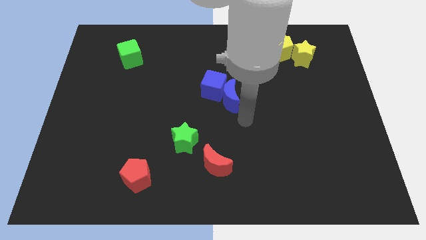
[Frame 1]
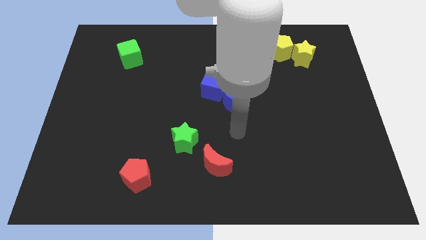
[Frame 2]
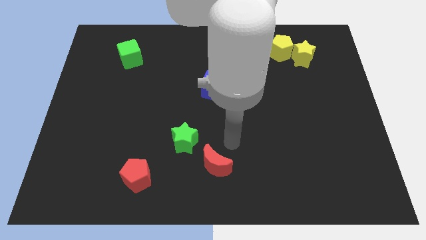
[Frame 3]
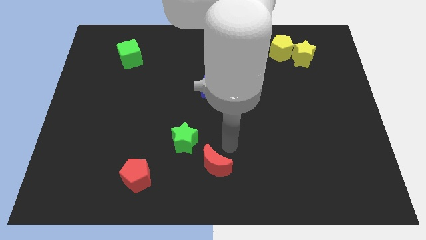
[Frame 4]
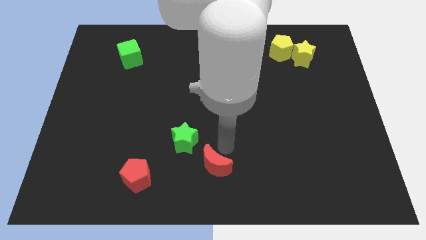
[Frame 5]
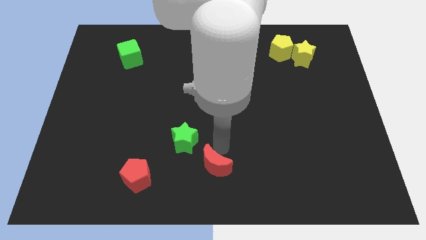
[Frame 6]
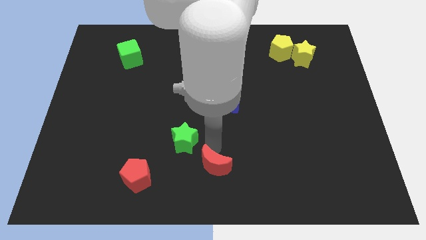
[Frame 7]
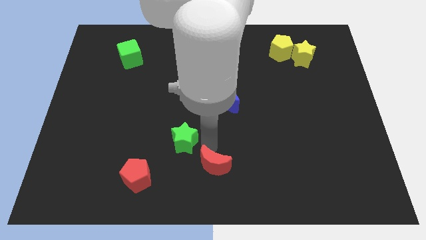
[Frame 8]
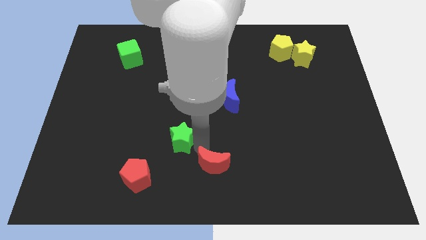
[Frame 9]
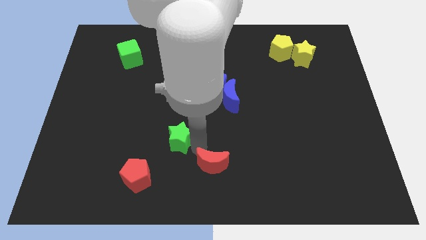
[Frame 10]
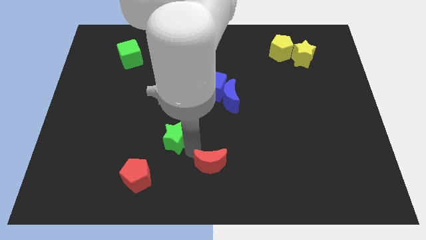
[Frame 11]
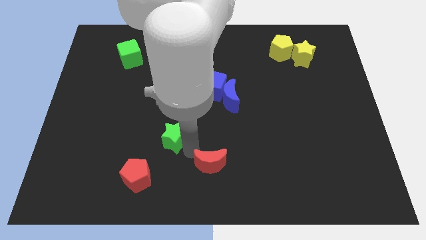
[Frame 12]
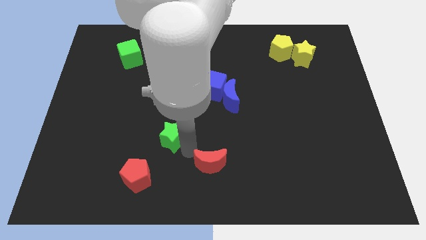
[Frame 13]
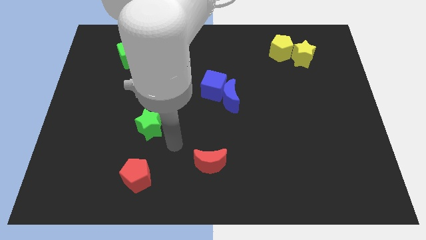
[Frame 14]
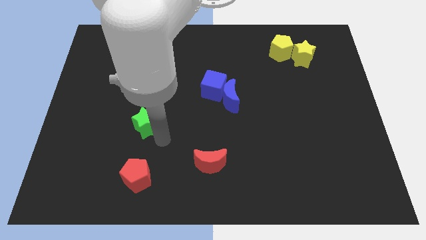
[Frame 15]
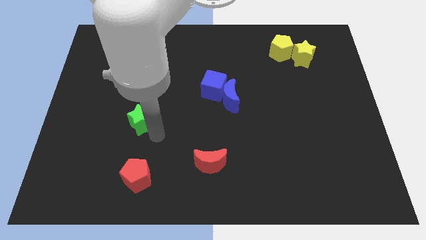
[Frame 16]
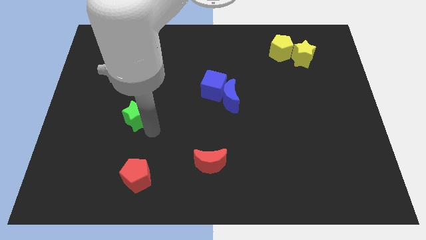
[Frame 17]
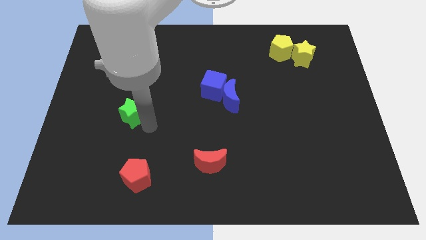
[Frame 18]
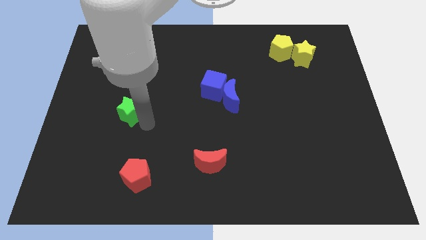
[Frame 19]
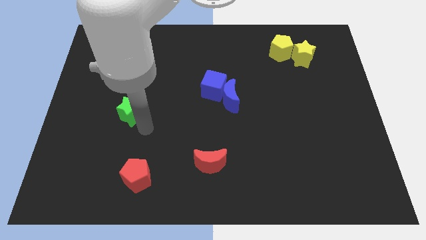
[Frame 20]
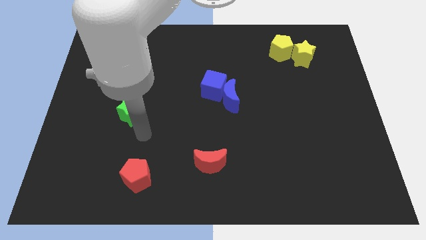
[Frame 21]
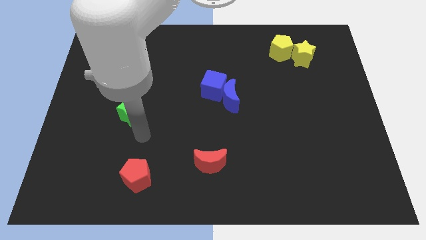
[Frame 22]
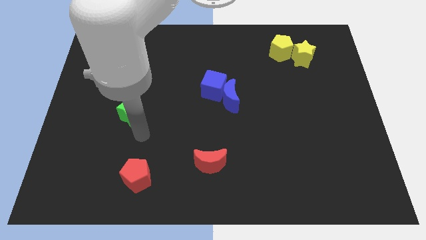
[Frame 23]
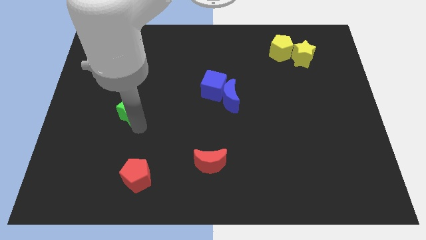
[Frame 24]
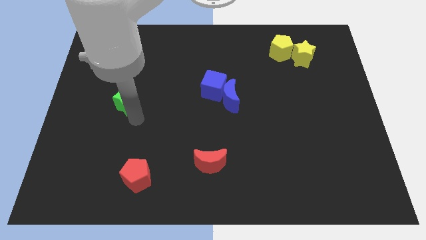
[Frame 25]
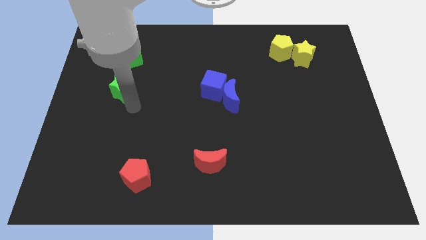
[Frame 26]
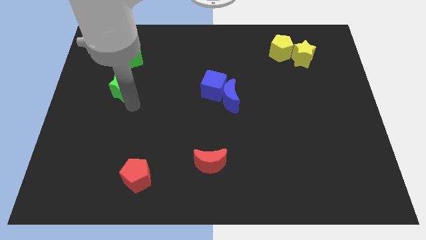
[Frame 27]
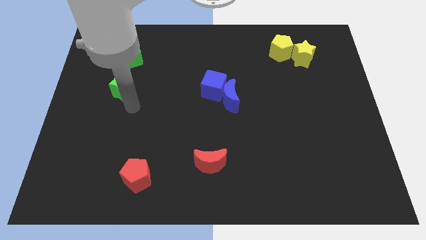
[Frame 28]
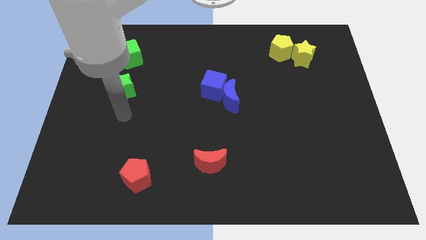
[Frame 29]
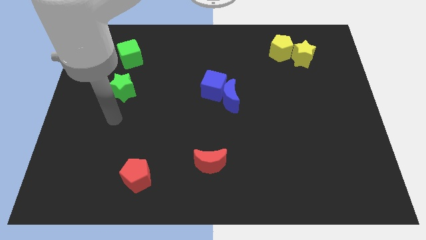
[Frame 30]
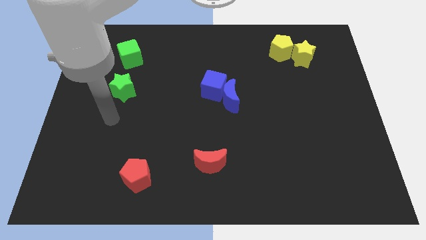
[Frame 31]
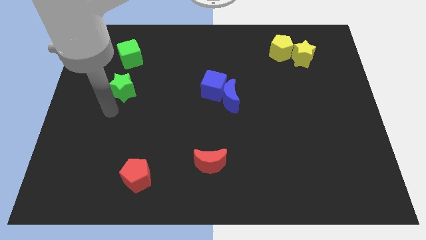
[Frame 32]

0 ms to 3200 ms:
put the green star bottom to the green cube

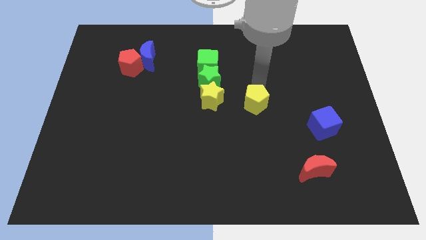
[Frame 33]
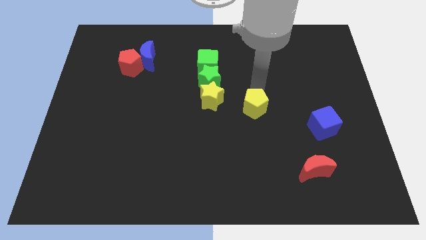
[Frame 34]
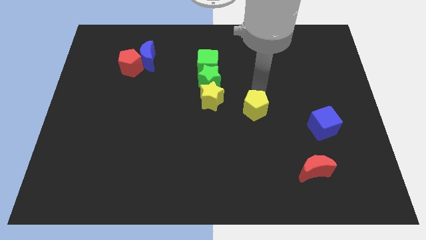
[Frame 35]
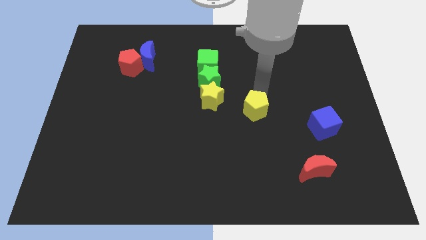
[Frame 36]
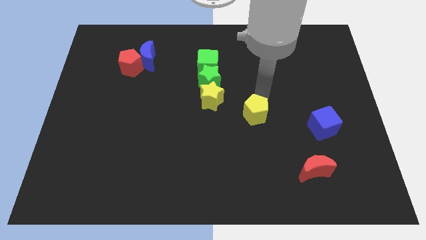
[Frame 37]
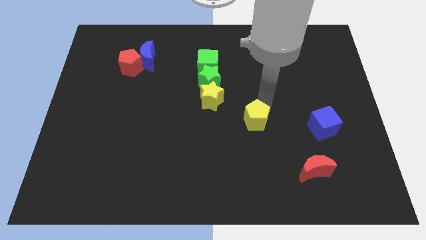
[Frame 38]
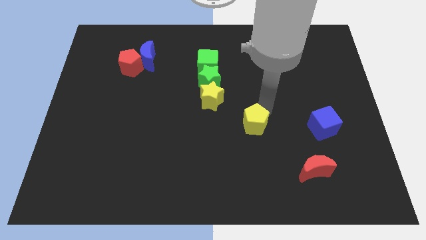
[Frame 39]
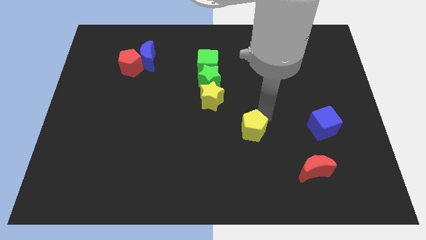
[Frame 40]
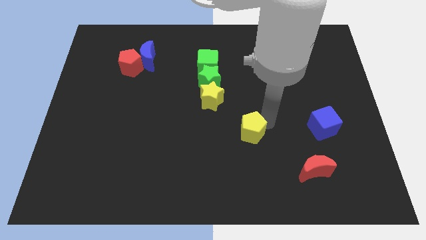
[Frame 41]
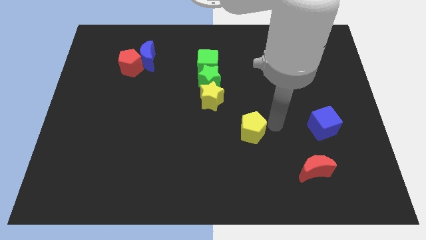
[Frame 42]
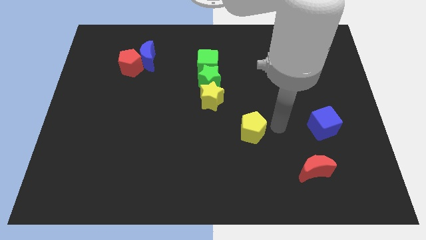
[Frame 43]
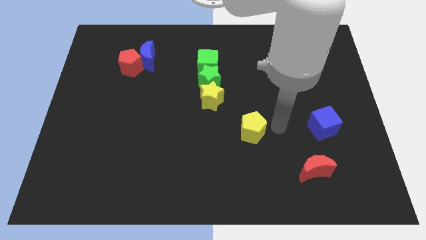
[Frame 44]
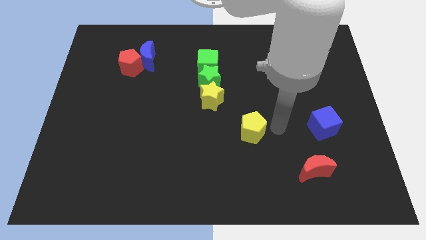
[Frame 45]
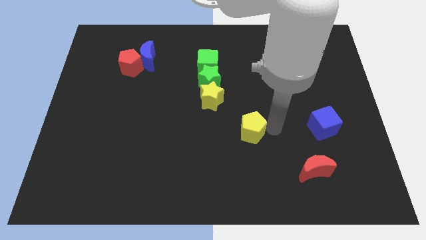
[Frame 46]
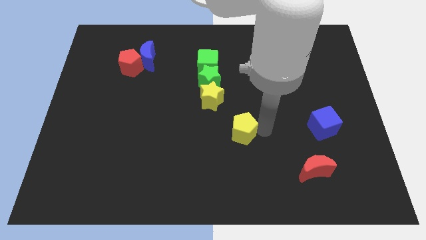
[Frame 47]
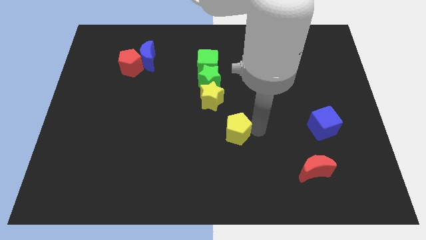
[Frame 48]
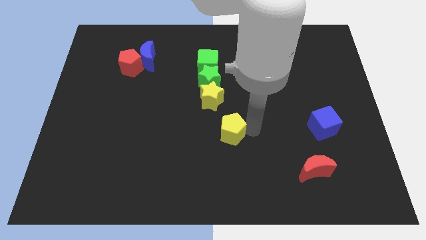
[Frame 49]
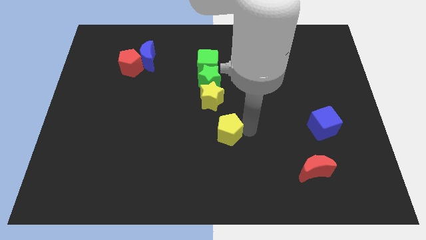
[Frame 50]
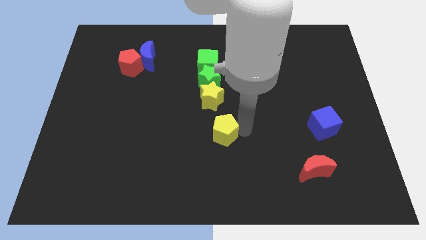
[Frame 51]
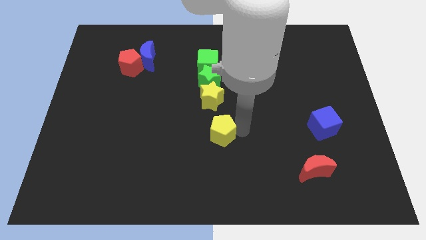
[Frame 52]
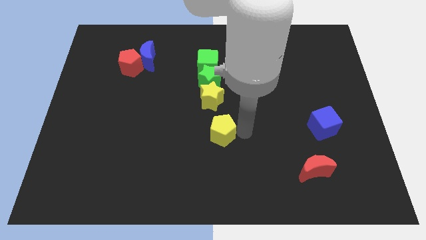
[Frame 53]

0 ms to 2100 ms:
slide the yellow pentagon to the bottom right of the star

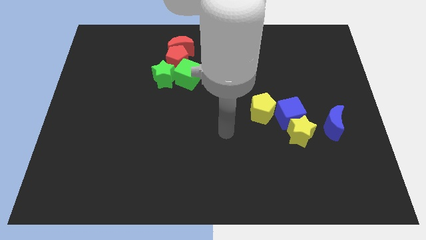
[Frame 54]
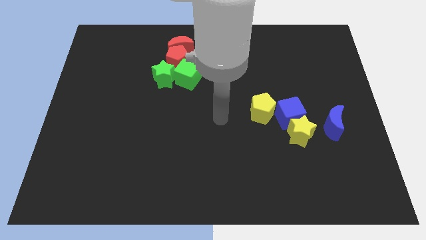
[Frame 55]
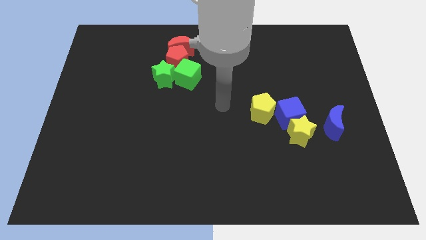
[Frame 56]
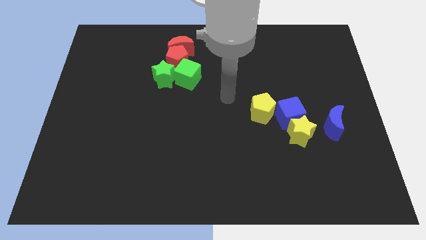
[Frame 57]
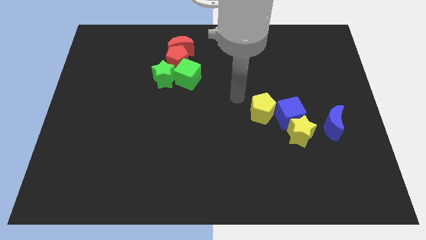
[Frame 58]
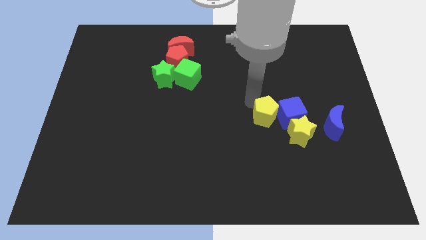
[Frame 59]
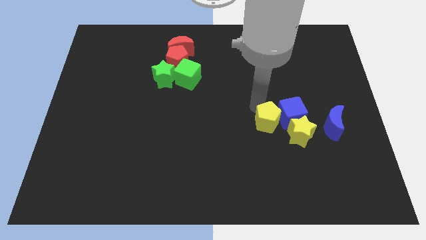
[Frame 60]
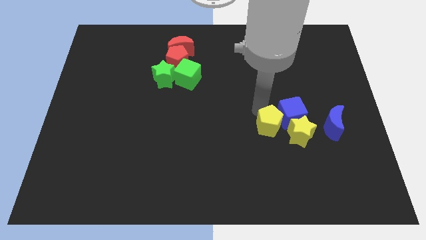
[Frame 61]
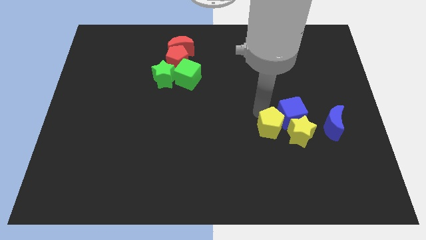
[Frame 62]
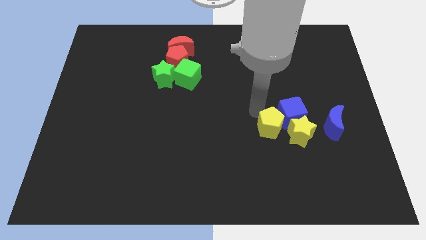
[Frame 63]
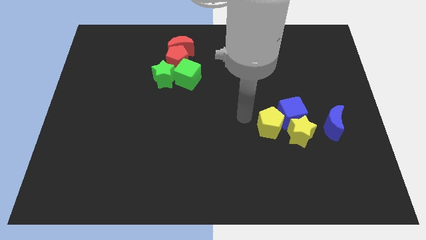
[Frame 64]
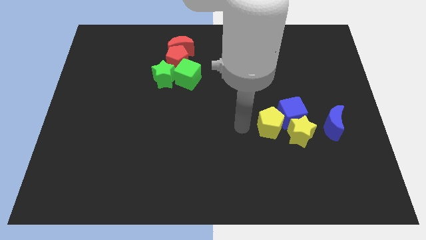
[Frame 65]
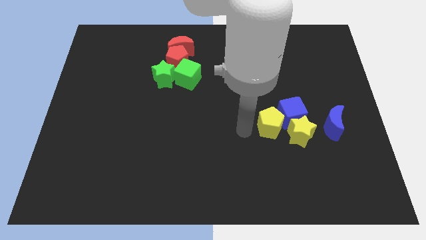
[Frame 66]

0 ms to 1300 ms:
move the yellow pentagon towards yellow star

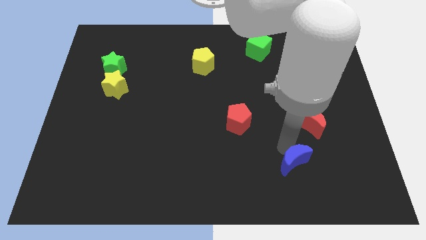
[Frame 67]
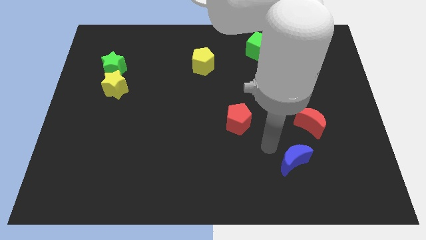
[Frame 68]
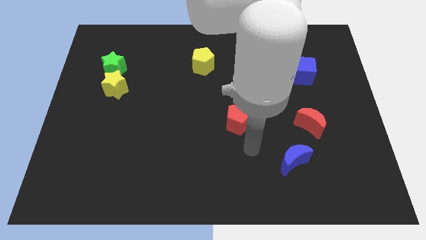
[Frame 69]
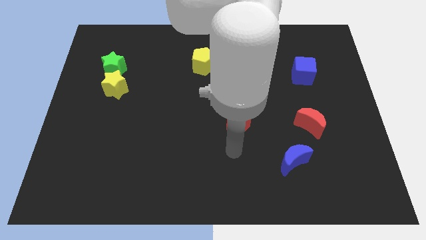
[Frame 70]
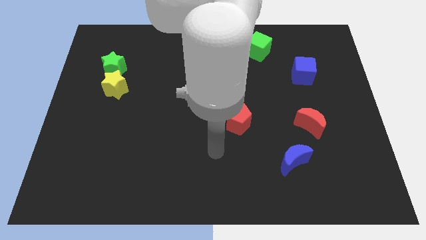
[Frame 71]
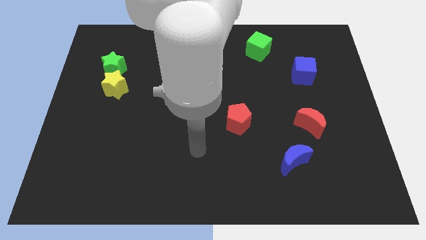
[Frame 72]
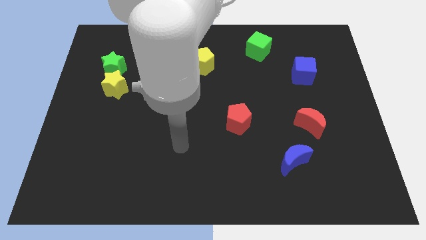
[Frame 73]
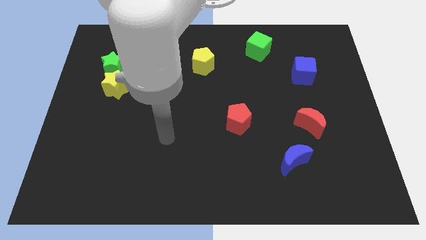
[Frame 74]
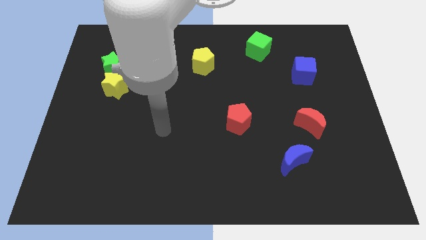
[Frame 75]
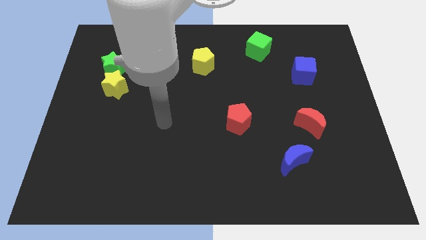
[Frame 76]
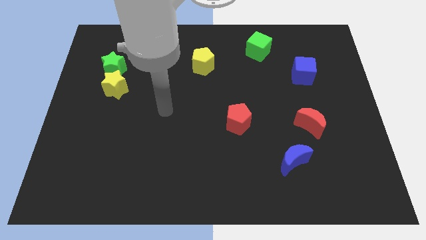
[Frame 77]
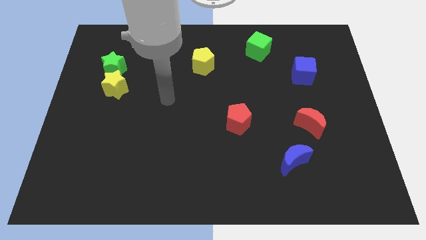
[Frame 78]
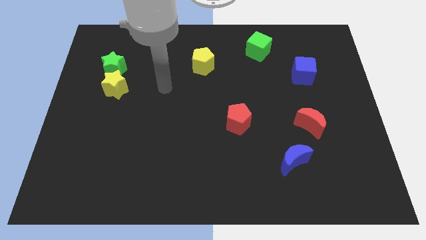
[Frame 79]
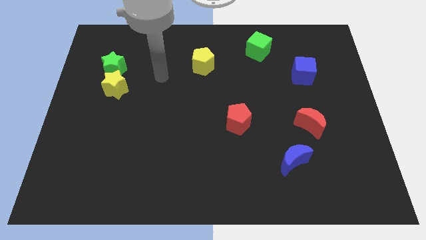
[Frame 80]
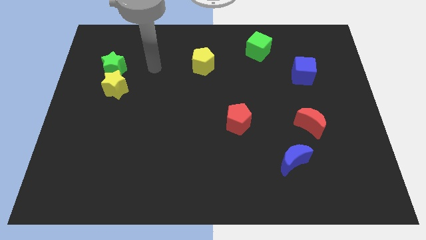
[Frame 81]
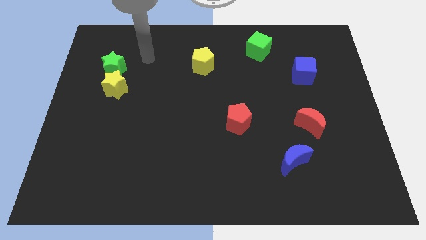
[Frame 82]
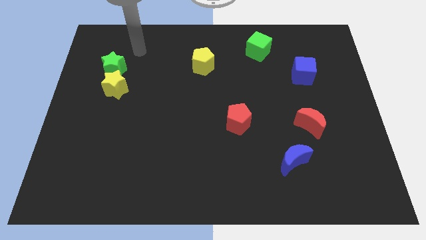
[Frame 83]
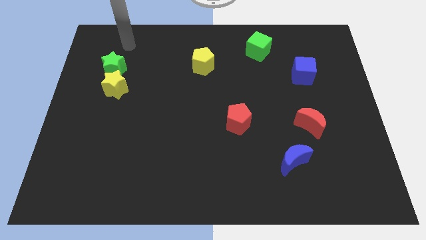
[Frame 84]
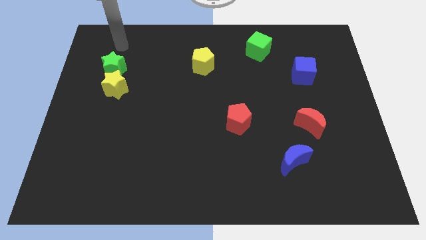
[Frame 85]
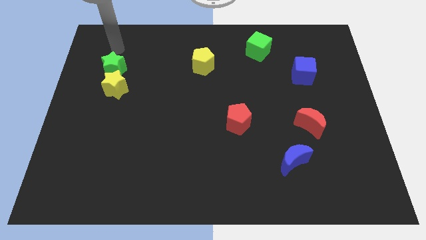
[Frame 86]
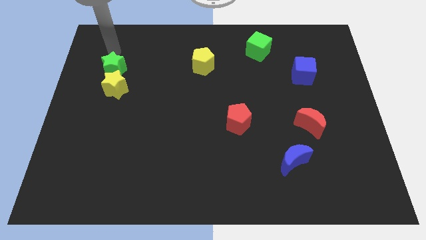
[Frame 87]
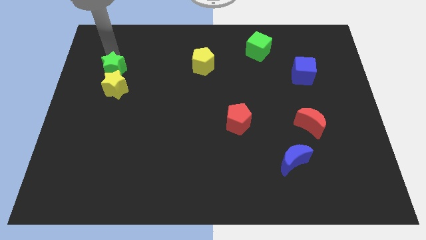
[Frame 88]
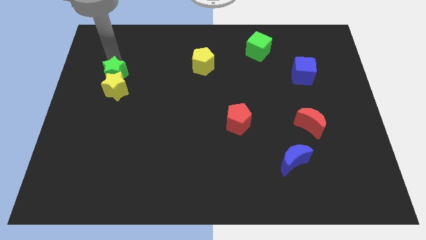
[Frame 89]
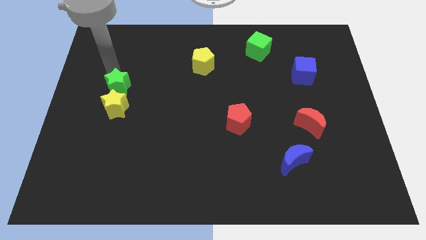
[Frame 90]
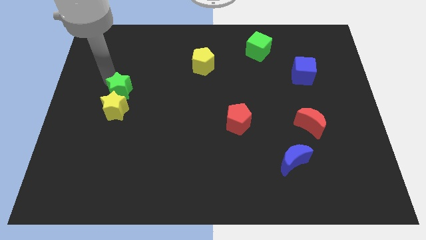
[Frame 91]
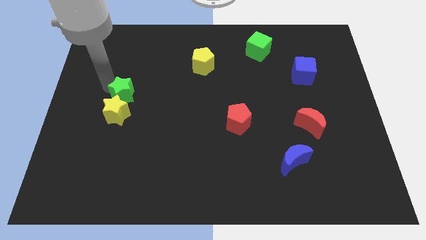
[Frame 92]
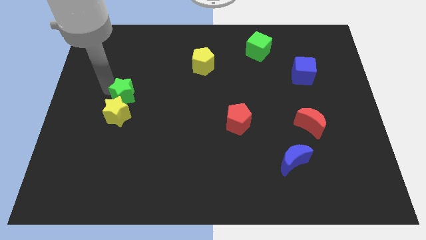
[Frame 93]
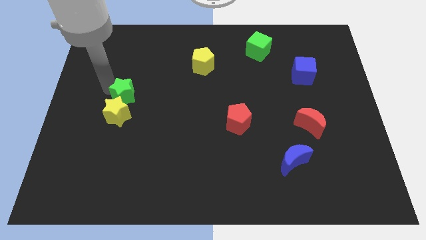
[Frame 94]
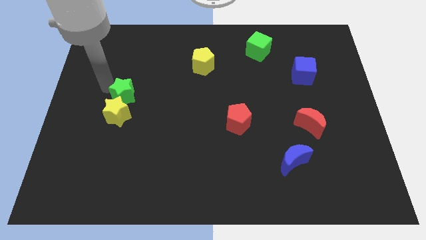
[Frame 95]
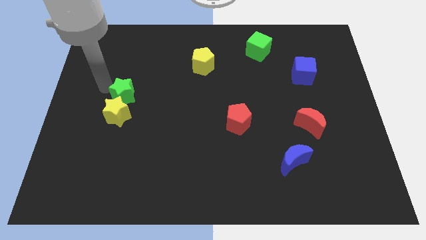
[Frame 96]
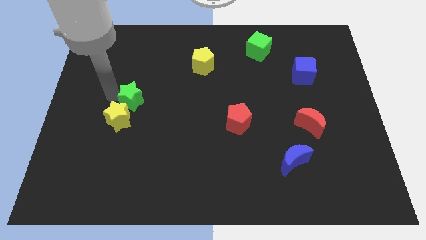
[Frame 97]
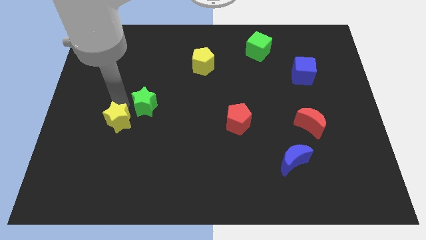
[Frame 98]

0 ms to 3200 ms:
push the green and yellow stars together towards bottom
